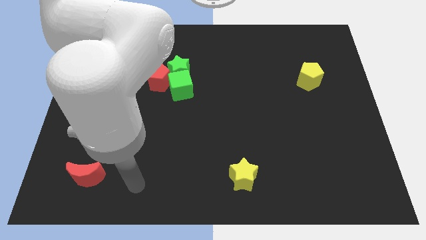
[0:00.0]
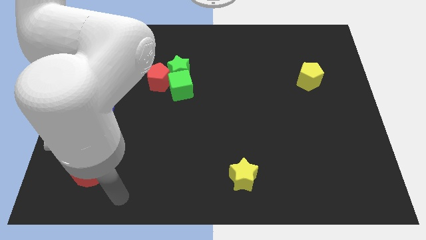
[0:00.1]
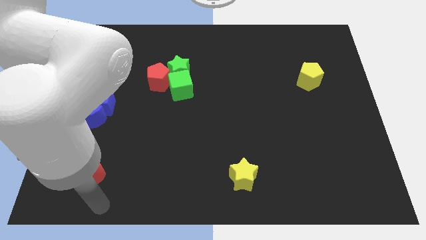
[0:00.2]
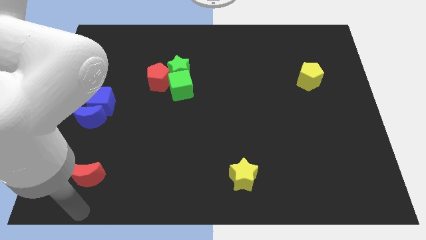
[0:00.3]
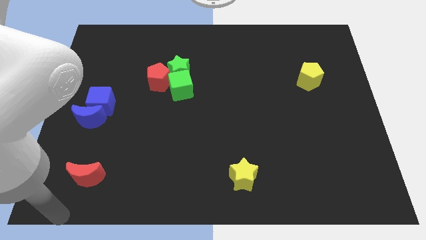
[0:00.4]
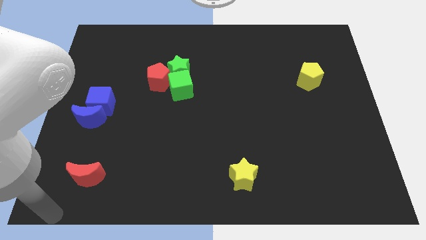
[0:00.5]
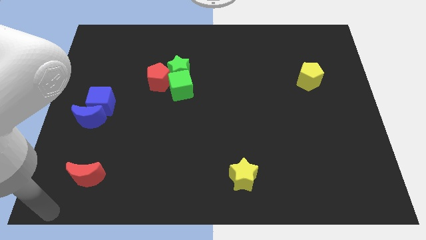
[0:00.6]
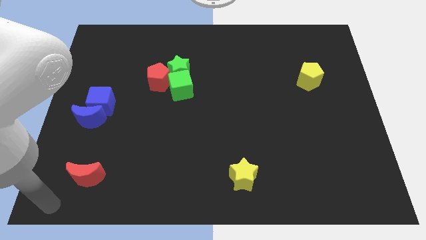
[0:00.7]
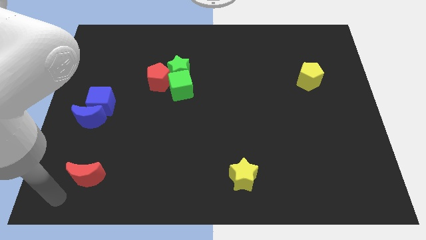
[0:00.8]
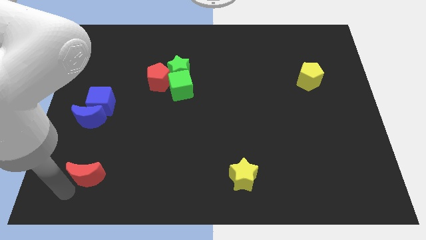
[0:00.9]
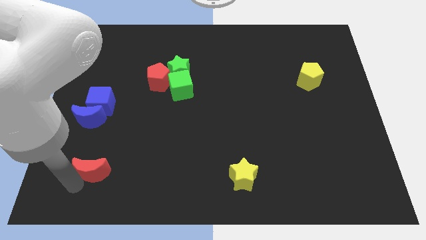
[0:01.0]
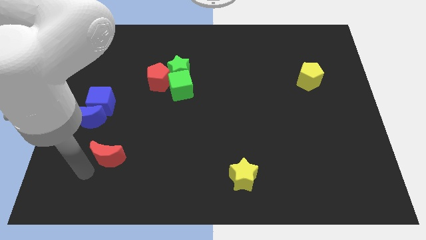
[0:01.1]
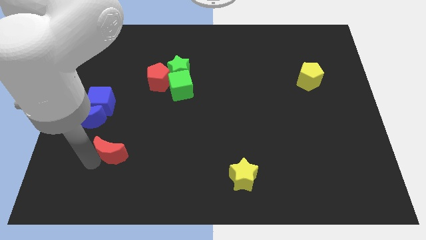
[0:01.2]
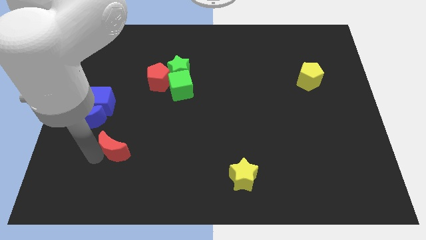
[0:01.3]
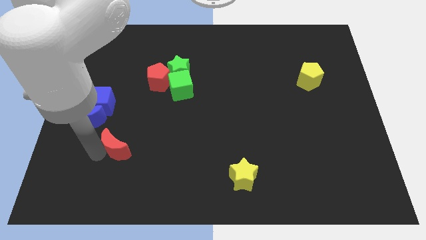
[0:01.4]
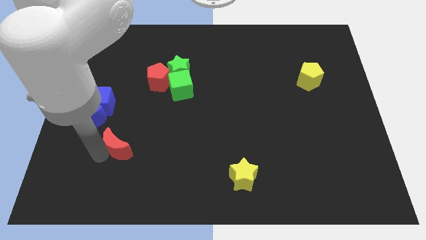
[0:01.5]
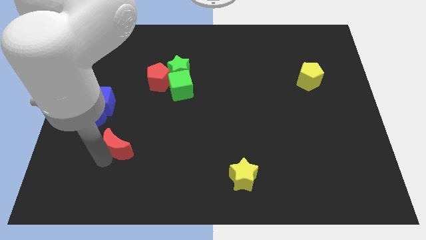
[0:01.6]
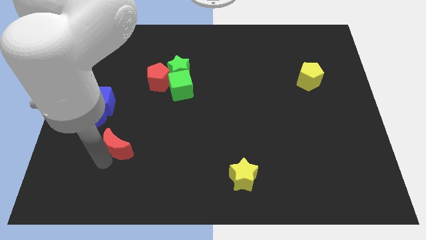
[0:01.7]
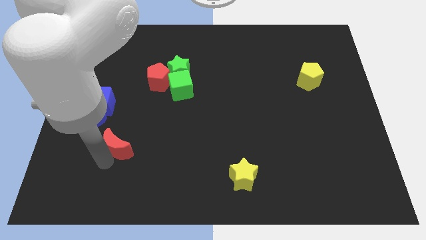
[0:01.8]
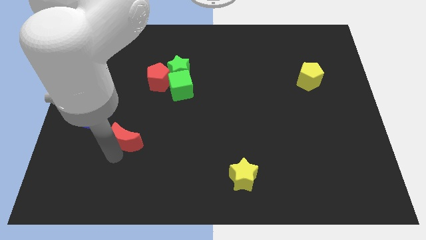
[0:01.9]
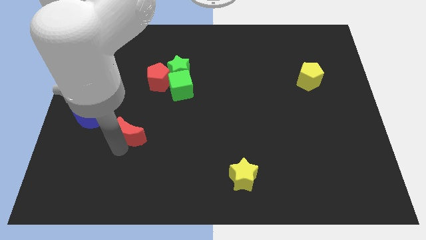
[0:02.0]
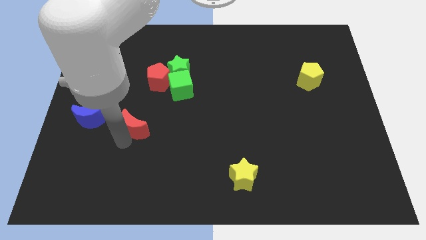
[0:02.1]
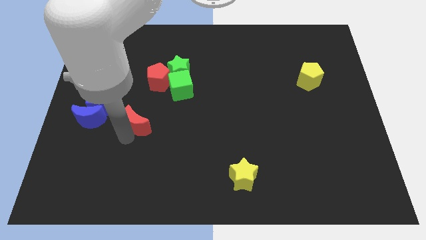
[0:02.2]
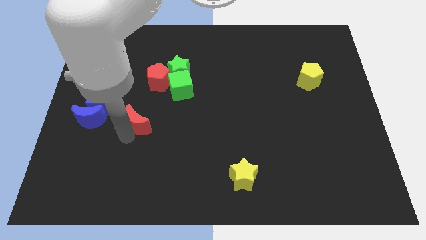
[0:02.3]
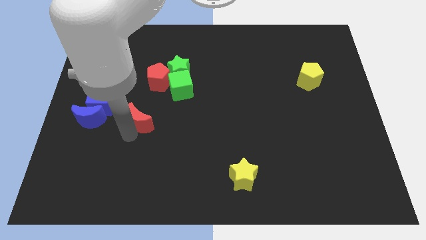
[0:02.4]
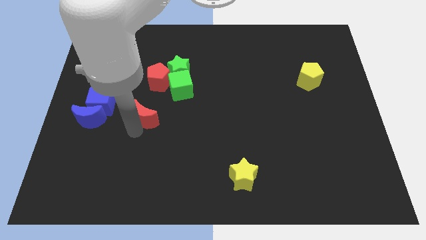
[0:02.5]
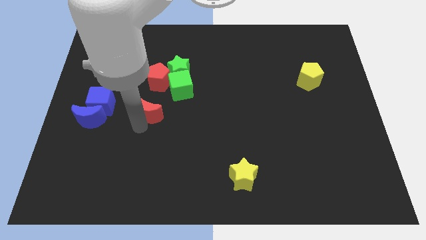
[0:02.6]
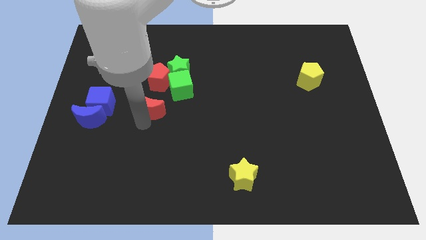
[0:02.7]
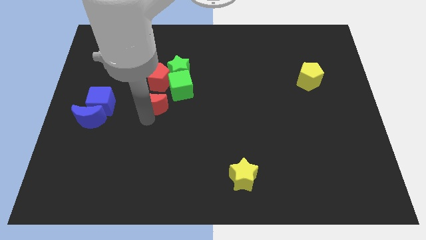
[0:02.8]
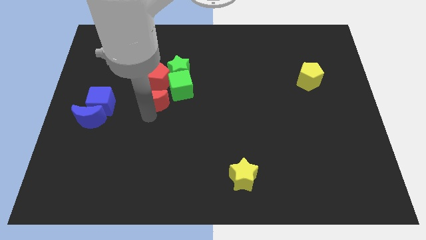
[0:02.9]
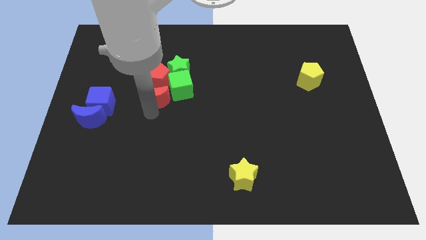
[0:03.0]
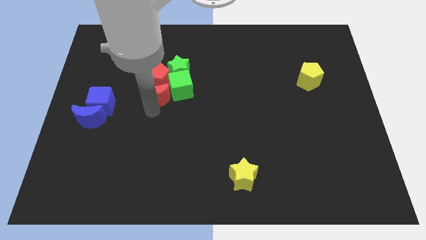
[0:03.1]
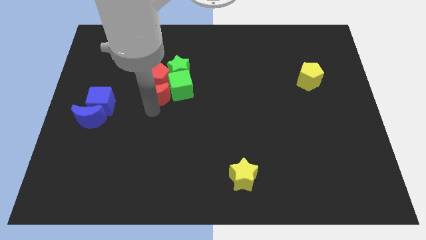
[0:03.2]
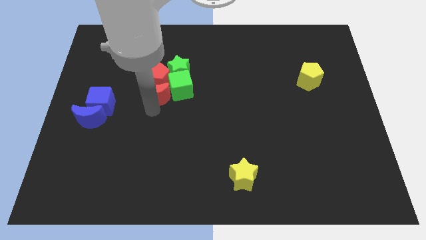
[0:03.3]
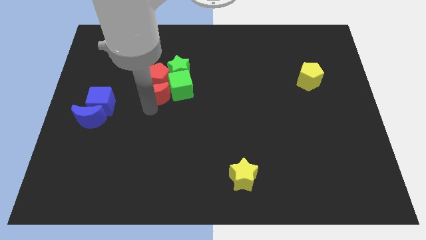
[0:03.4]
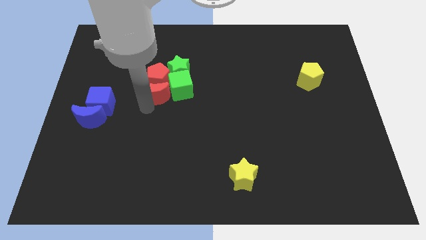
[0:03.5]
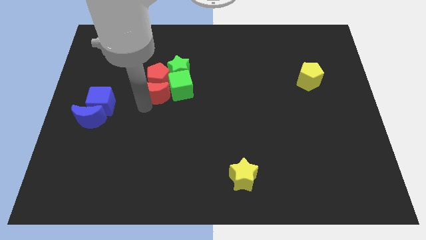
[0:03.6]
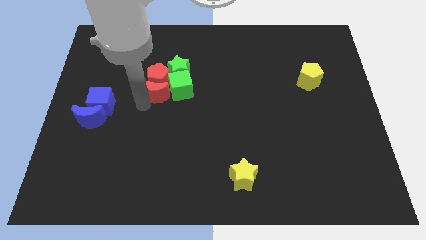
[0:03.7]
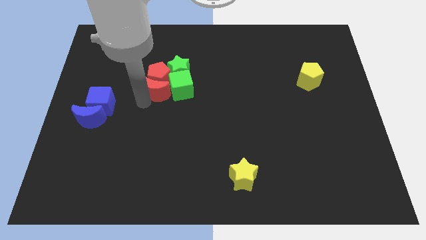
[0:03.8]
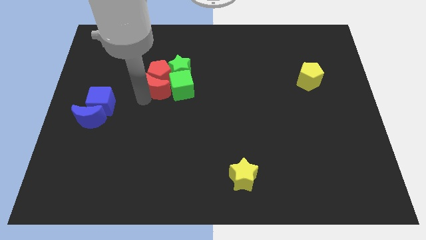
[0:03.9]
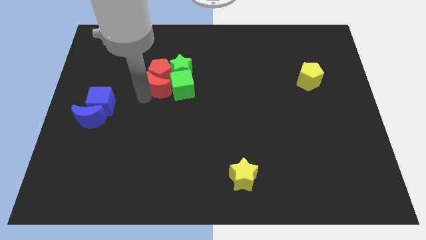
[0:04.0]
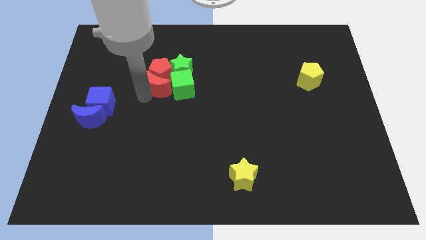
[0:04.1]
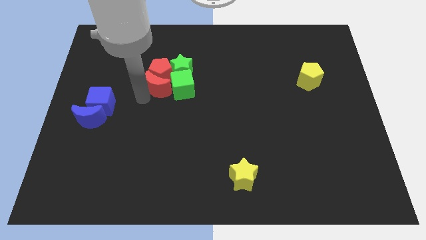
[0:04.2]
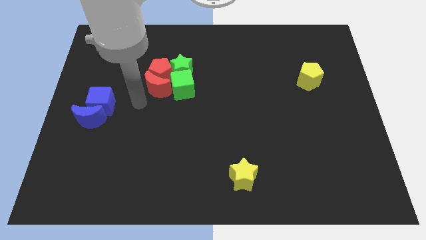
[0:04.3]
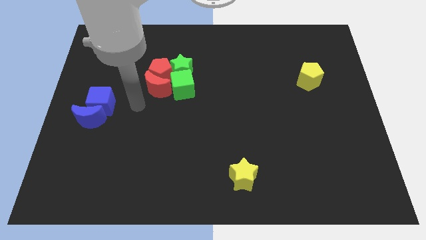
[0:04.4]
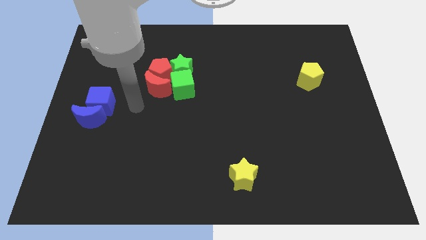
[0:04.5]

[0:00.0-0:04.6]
push the red moon into red pentagon

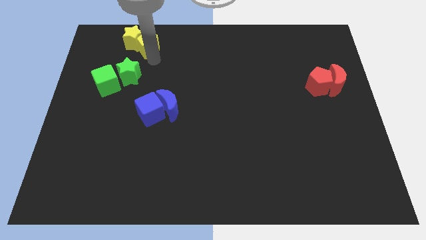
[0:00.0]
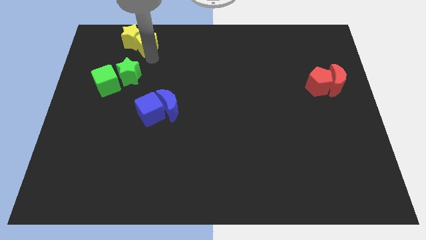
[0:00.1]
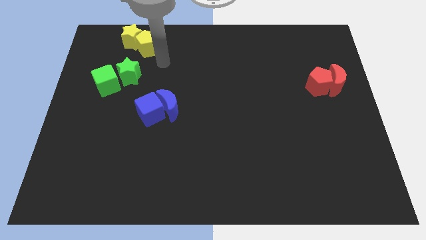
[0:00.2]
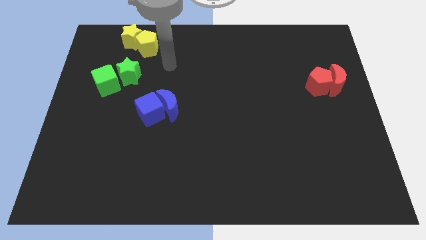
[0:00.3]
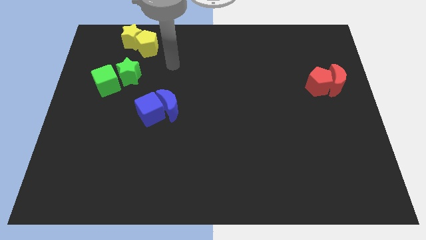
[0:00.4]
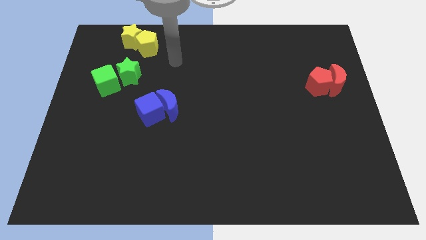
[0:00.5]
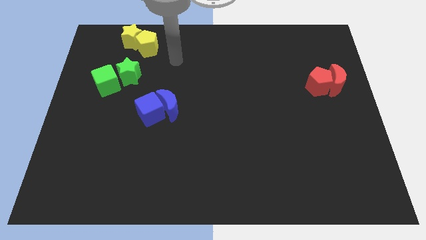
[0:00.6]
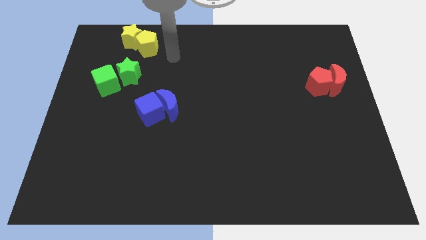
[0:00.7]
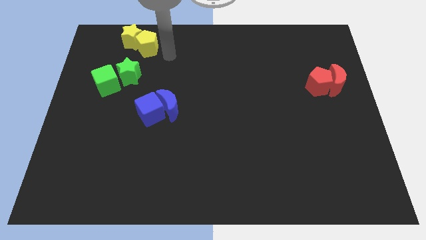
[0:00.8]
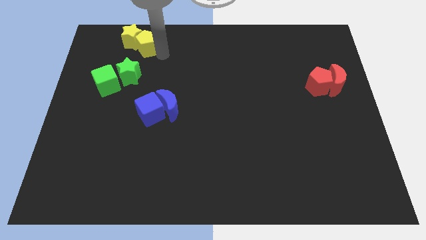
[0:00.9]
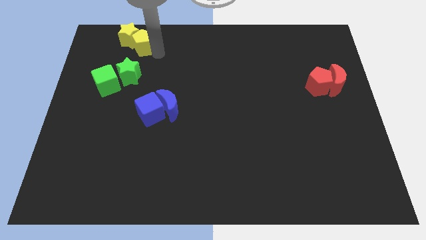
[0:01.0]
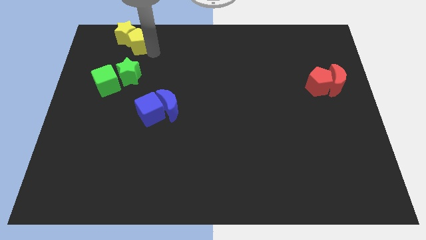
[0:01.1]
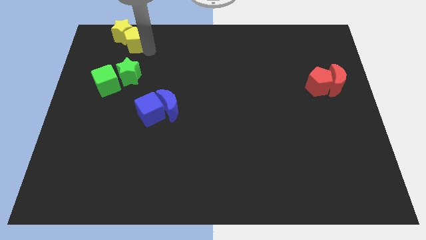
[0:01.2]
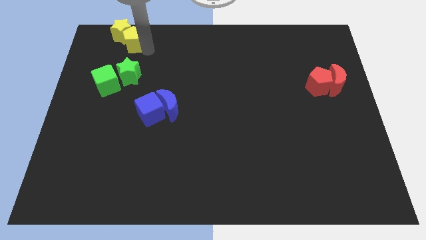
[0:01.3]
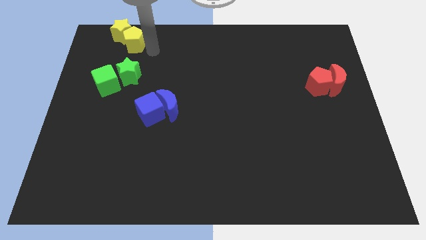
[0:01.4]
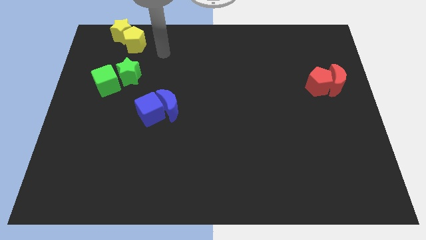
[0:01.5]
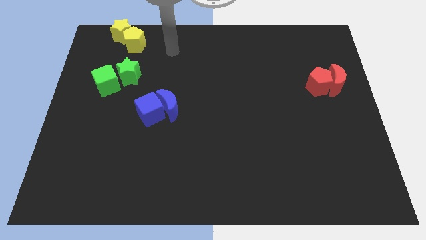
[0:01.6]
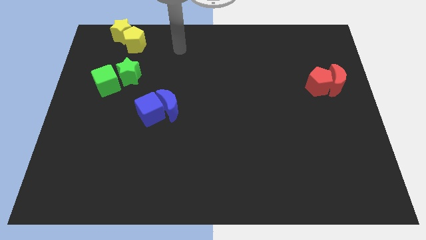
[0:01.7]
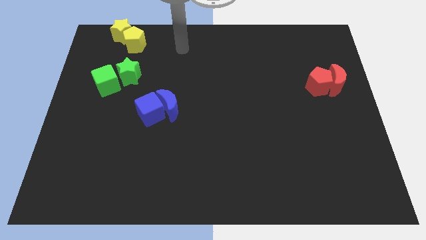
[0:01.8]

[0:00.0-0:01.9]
move the yellow pentagon and the yellow star towards the top left side of the board

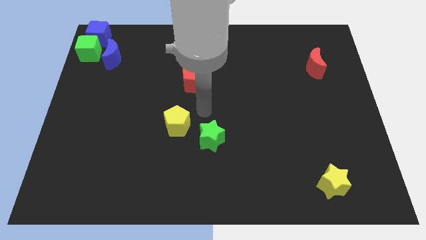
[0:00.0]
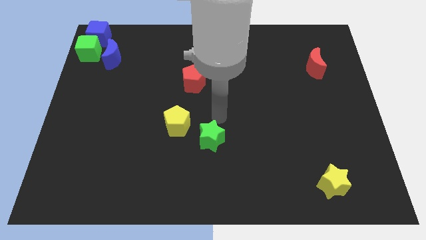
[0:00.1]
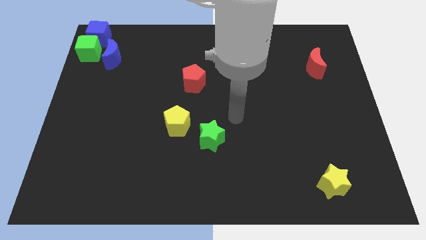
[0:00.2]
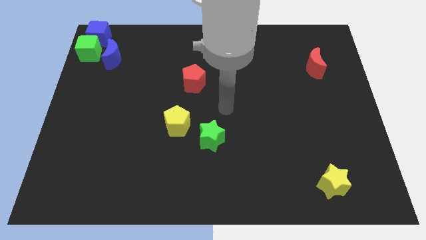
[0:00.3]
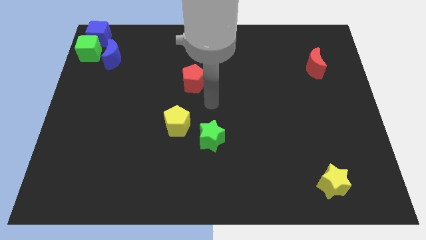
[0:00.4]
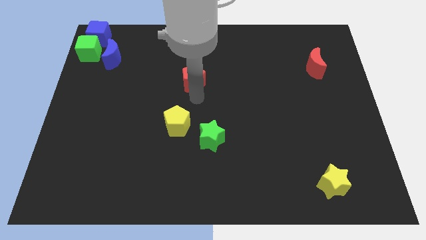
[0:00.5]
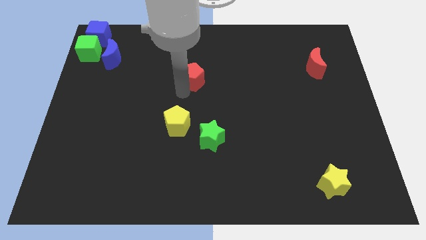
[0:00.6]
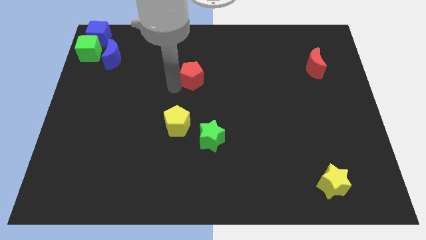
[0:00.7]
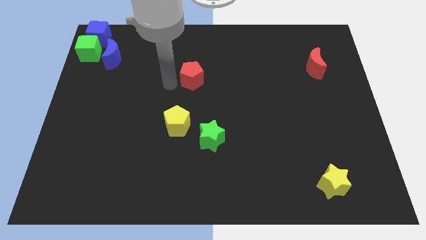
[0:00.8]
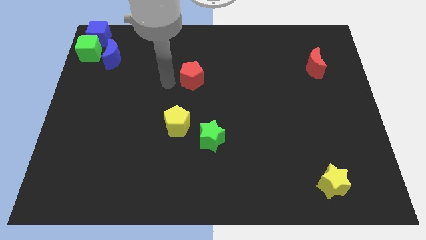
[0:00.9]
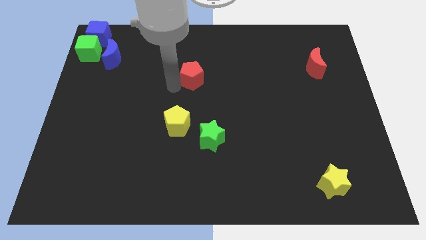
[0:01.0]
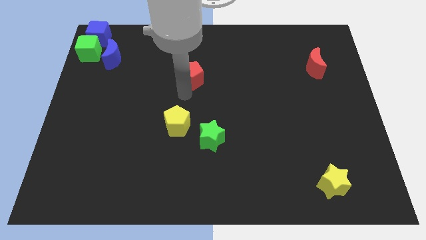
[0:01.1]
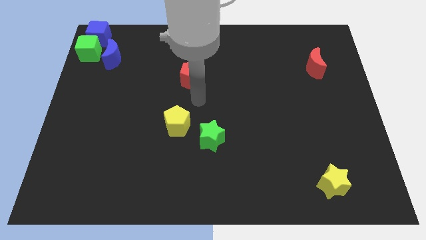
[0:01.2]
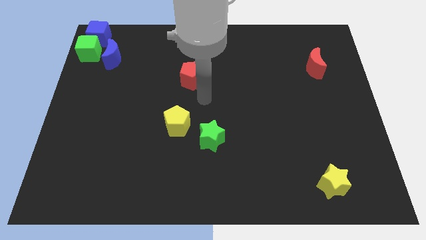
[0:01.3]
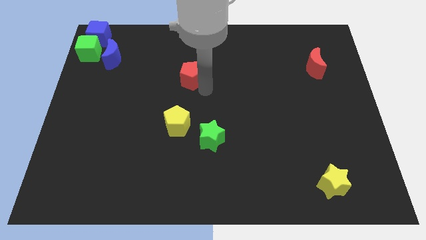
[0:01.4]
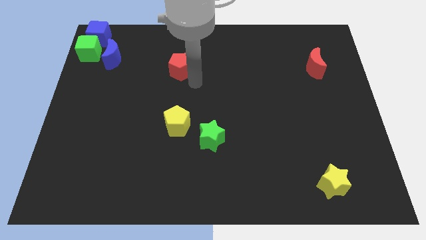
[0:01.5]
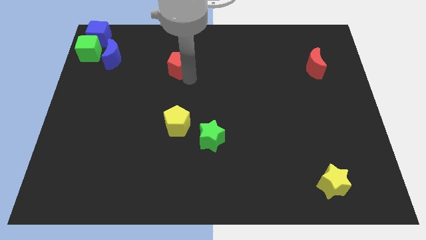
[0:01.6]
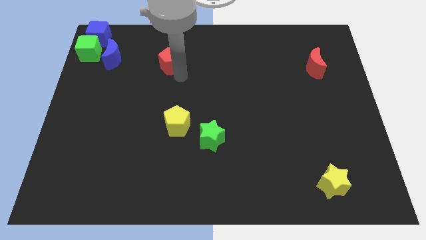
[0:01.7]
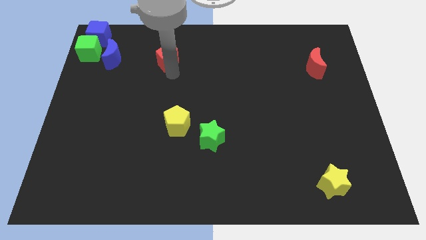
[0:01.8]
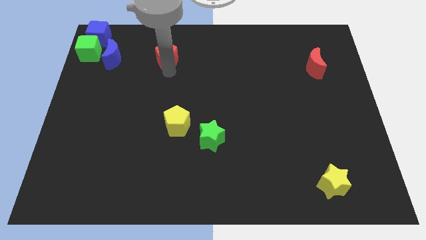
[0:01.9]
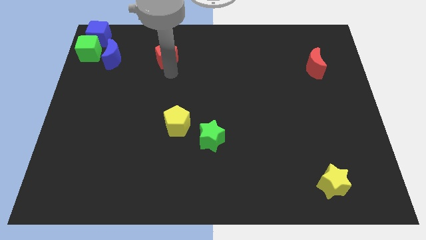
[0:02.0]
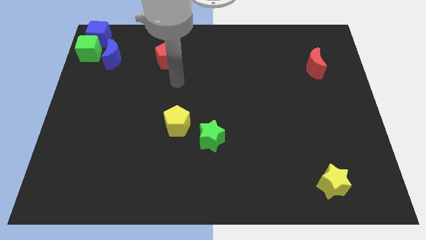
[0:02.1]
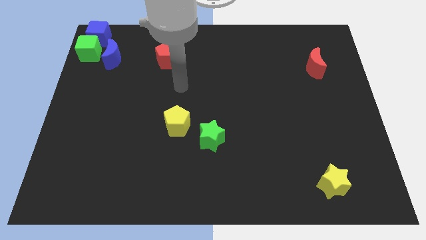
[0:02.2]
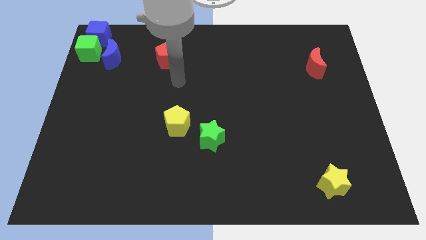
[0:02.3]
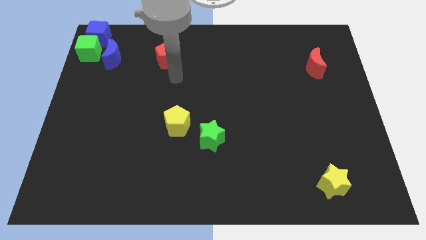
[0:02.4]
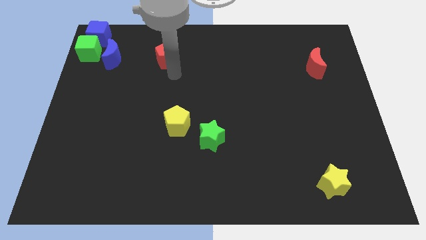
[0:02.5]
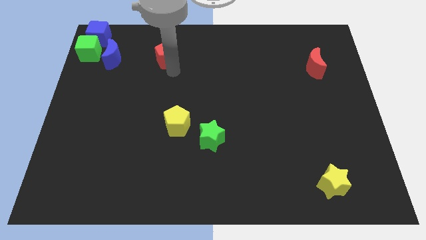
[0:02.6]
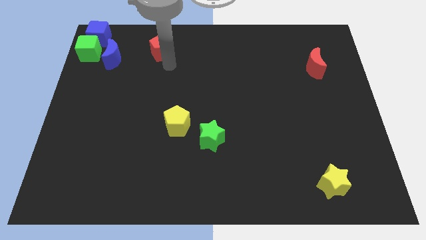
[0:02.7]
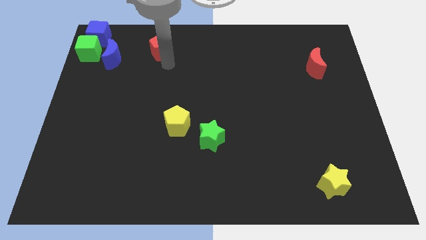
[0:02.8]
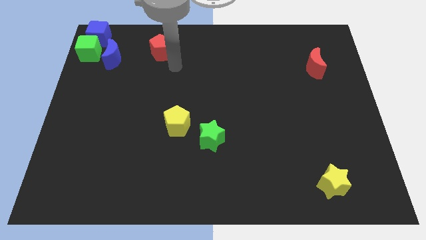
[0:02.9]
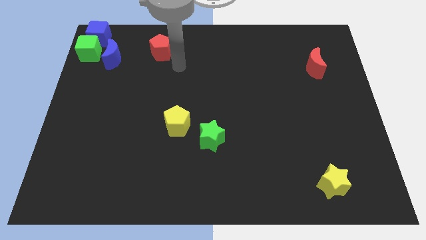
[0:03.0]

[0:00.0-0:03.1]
place red pentagon parallel to green cube
